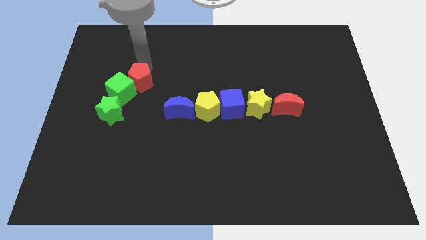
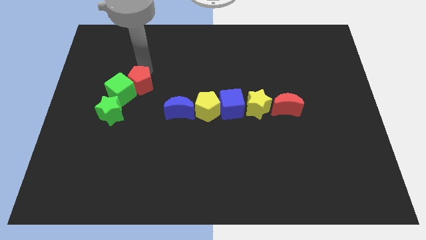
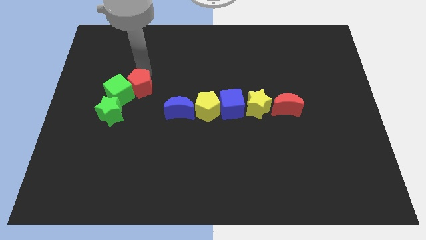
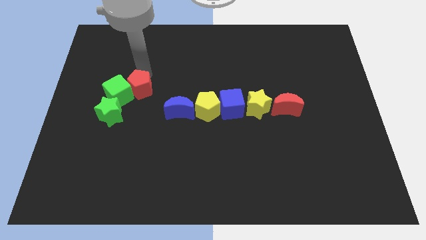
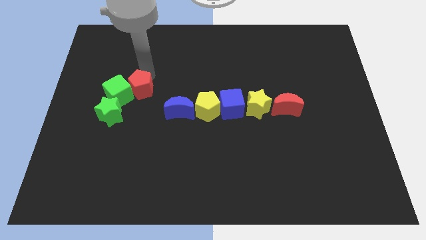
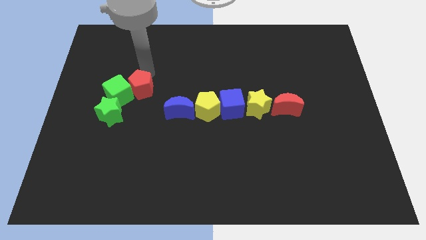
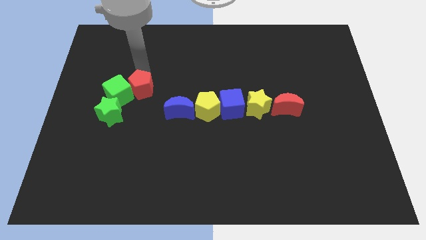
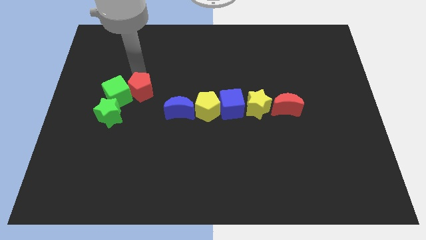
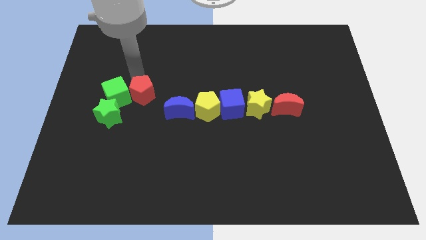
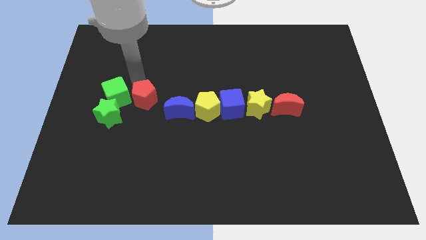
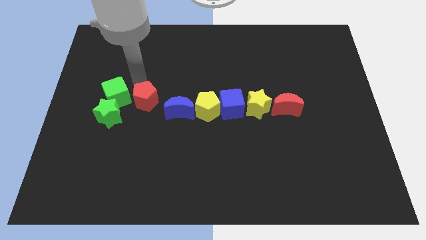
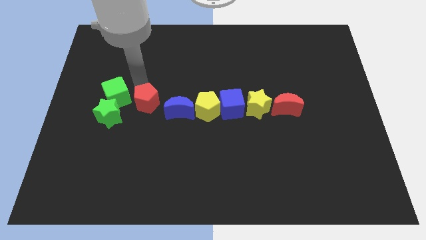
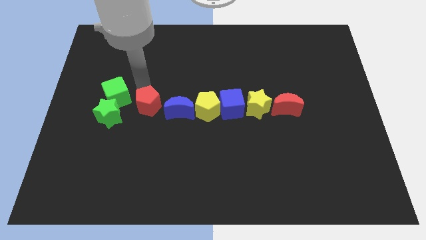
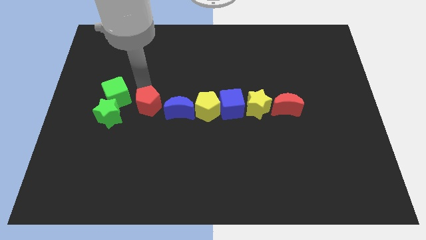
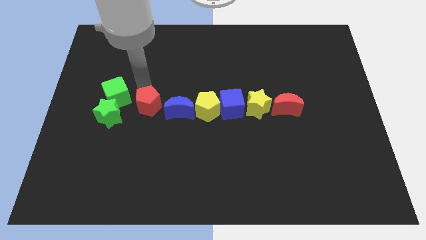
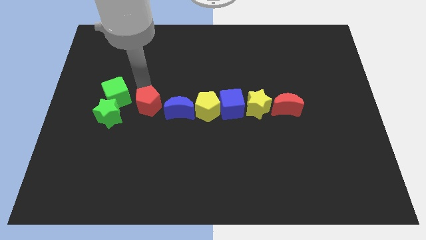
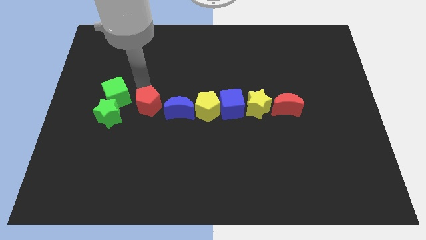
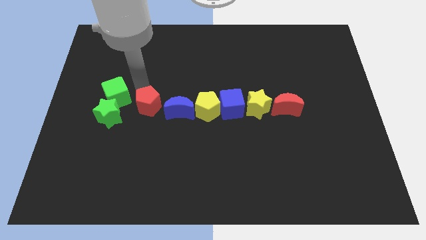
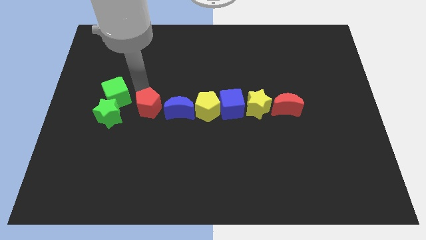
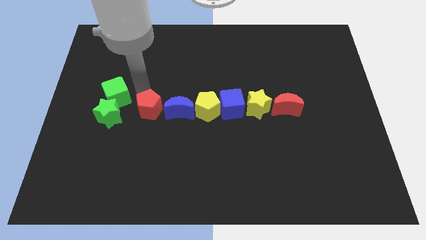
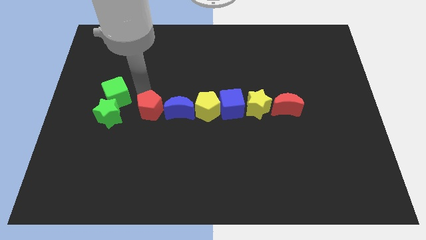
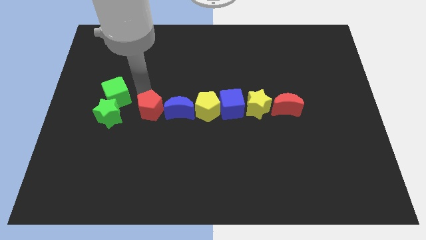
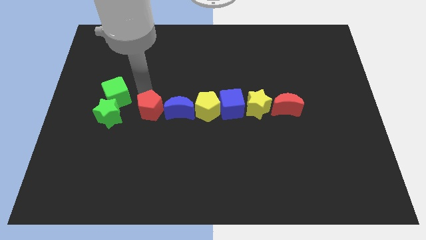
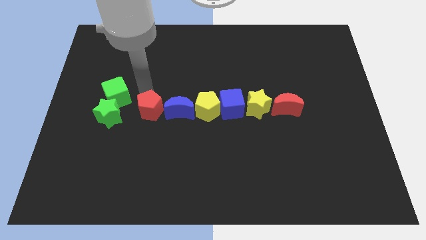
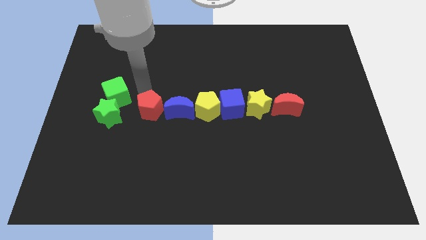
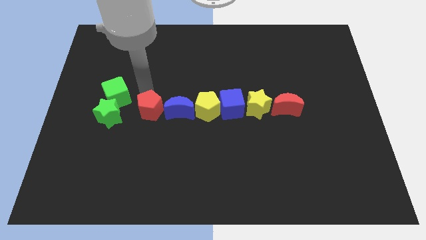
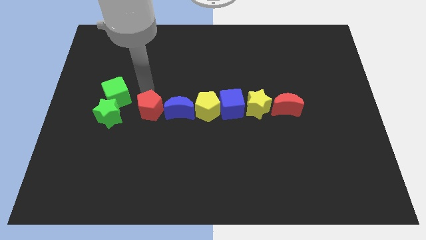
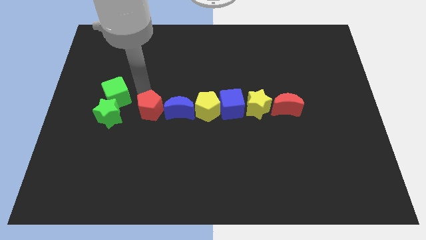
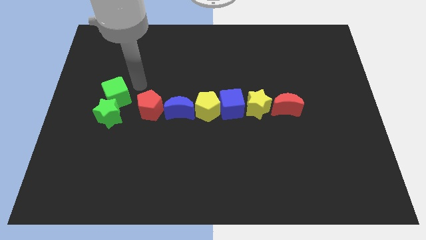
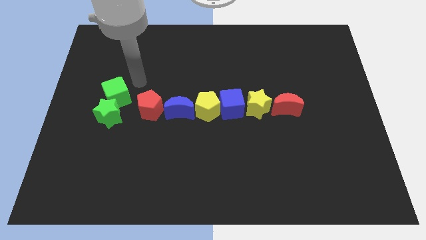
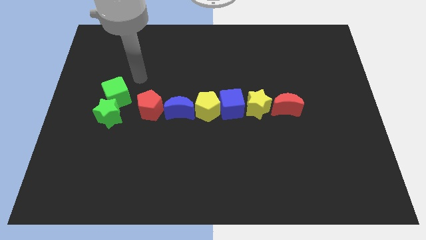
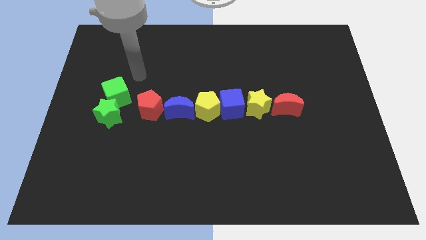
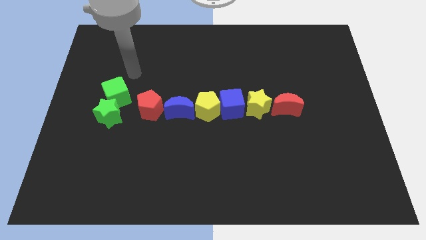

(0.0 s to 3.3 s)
place red pentagon to the left of blue crescent

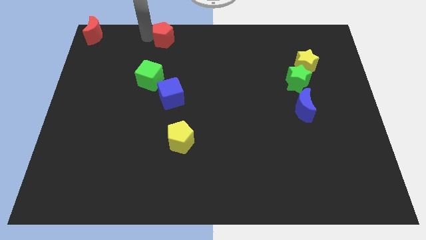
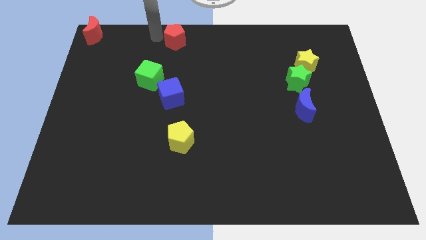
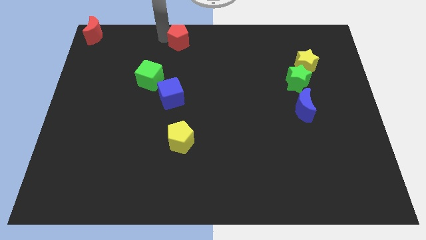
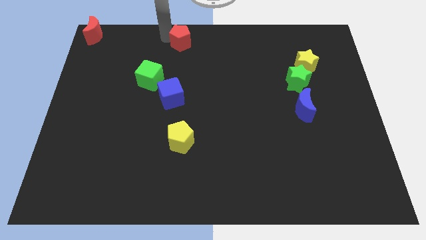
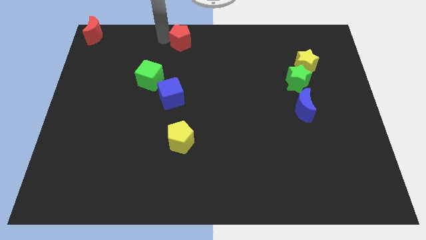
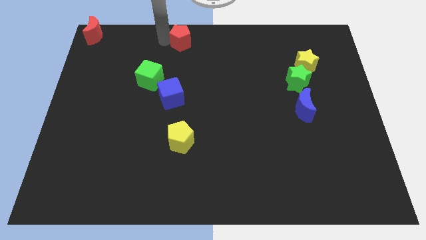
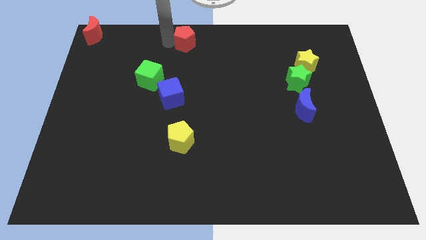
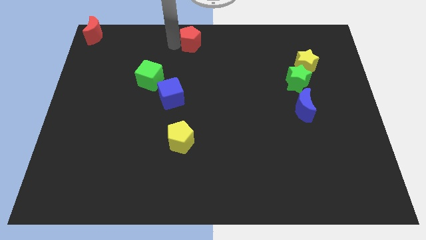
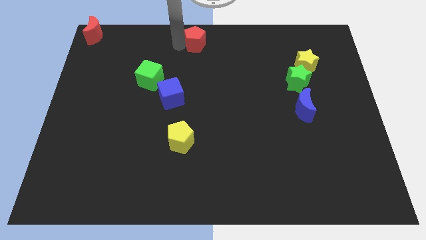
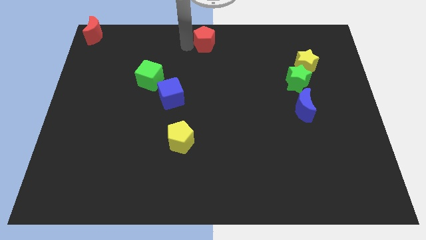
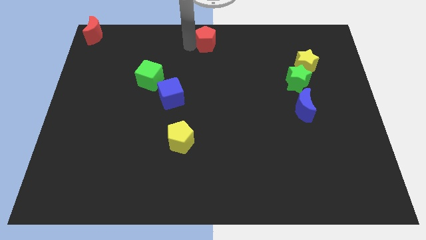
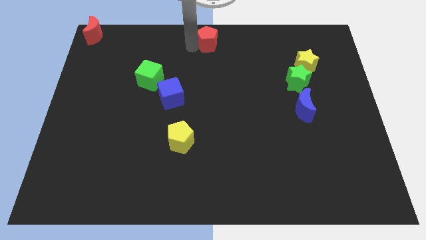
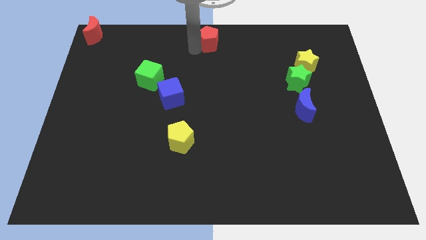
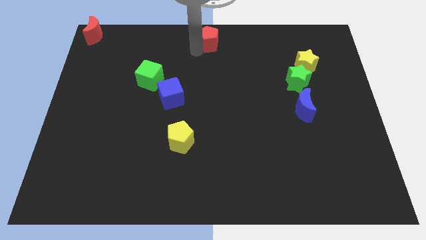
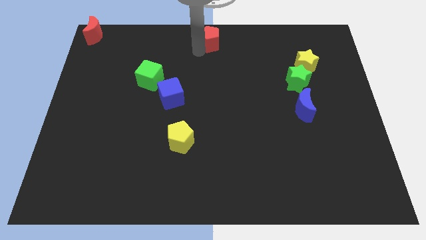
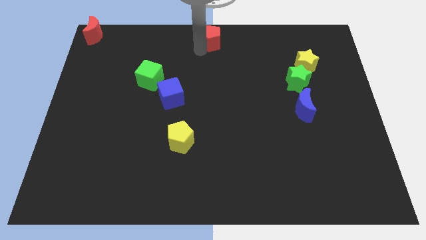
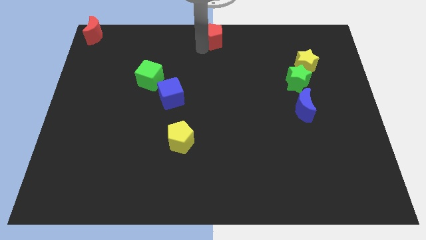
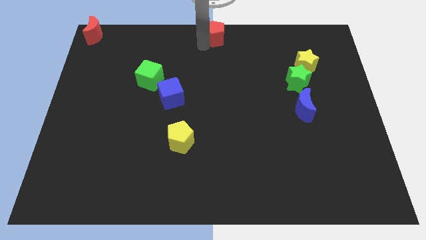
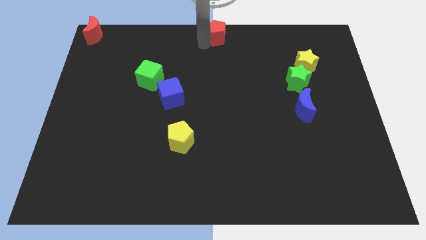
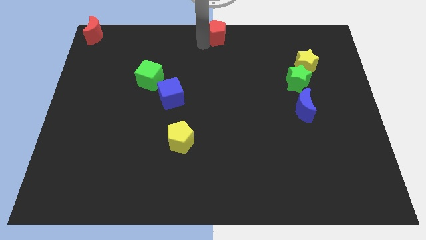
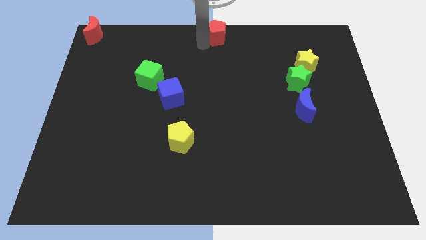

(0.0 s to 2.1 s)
place the red pentagon to the top center of the board

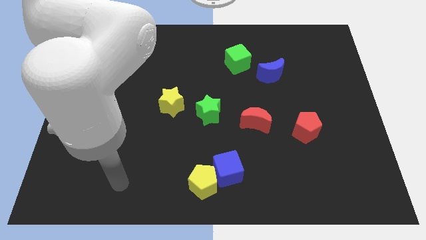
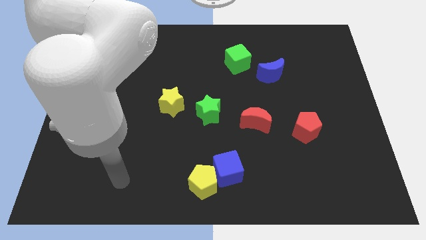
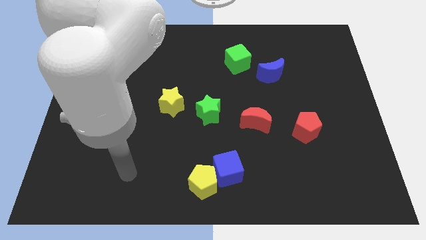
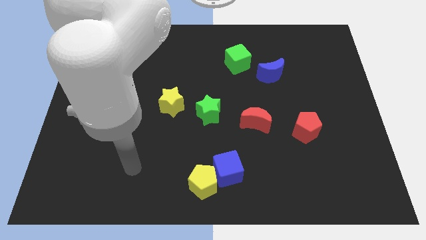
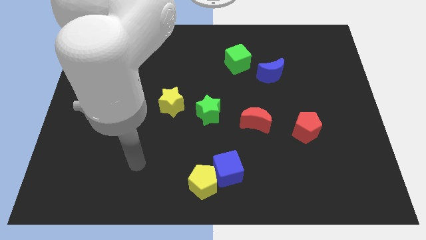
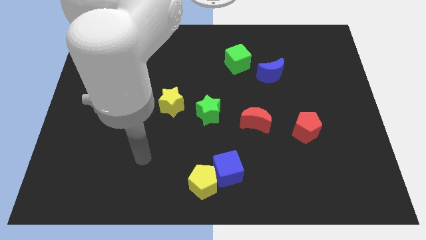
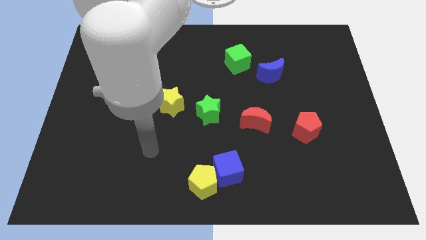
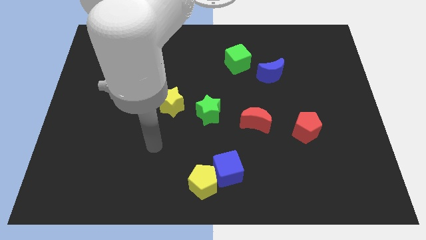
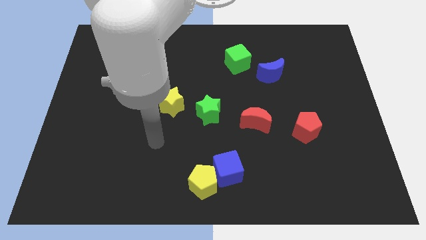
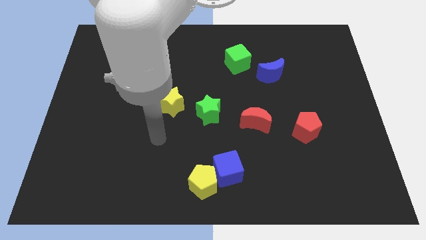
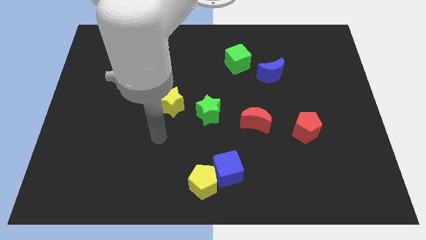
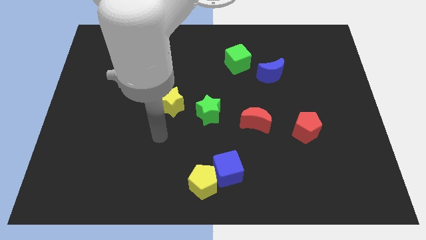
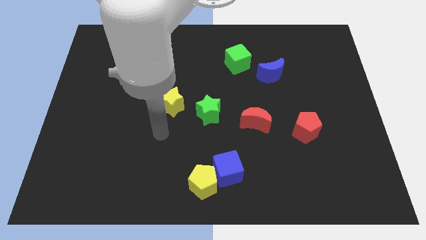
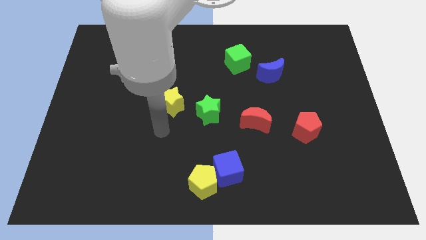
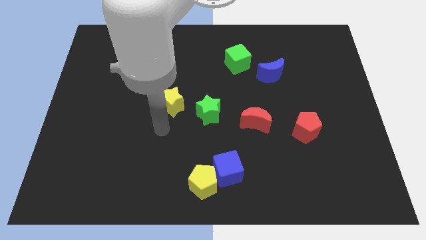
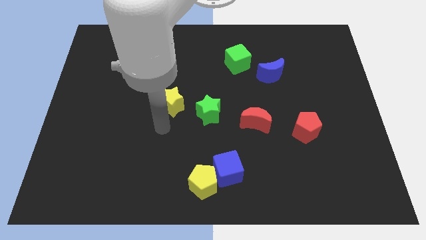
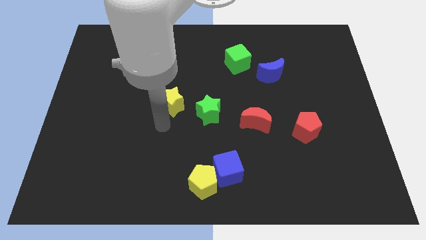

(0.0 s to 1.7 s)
place your hand below the yellow star

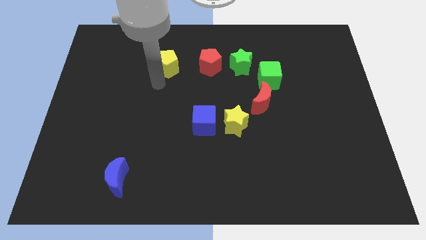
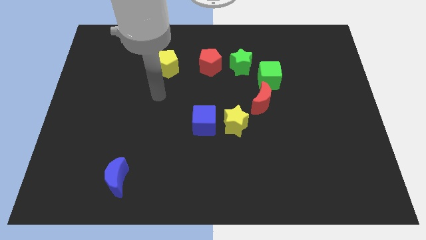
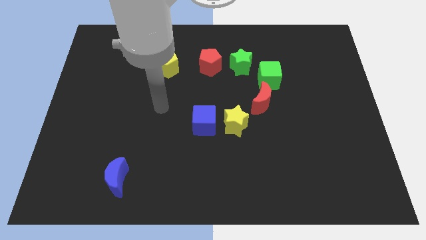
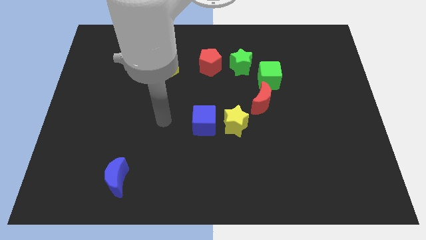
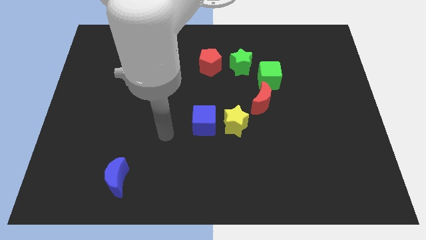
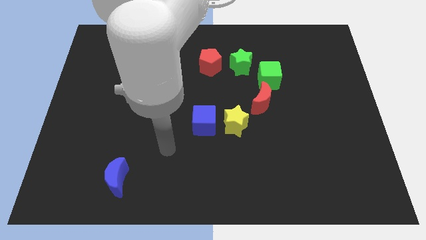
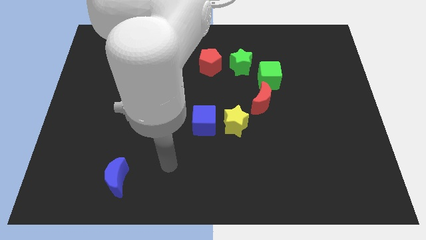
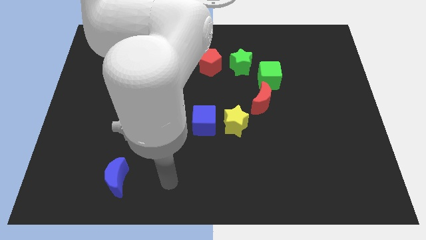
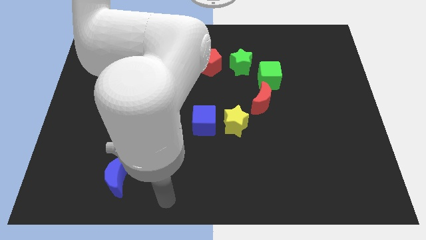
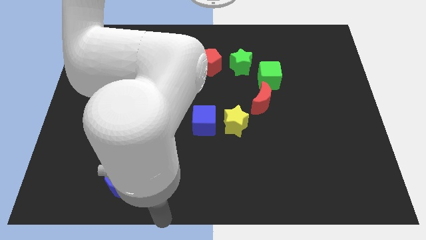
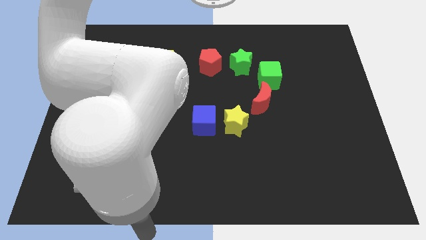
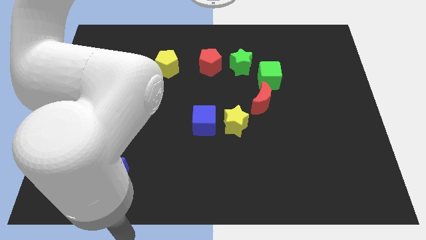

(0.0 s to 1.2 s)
move your arm away from the yellow pentagon

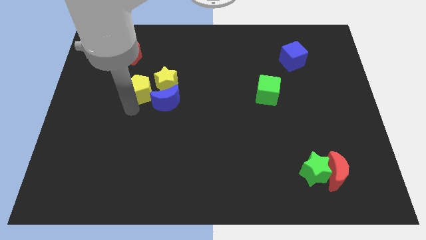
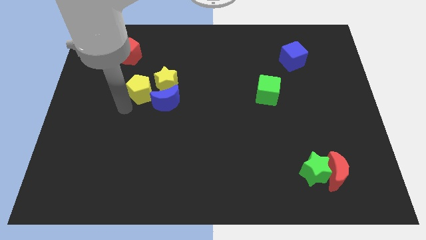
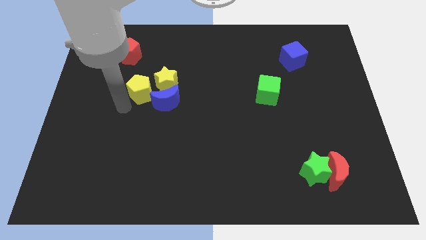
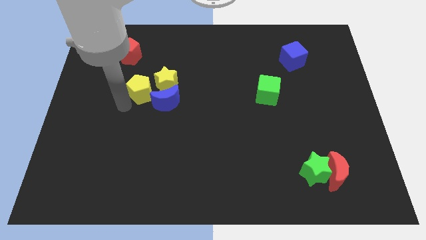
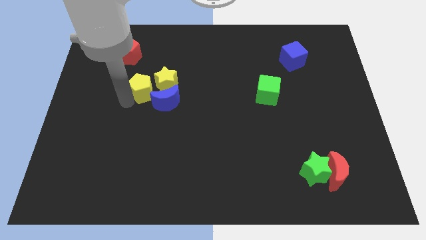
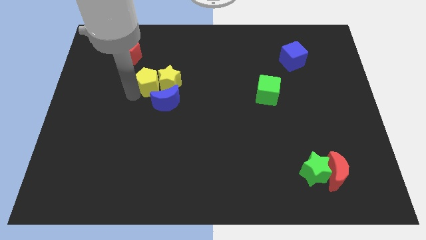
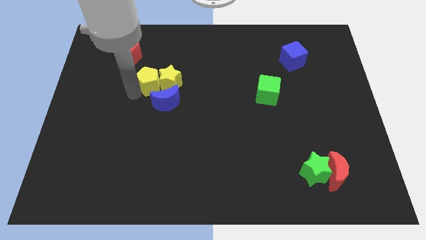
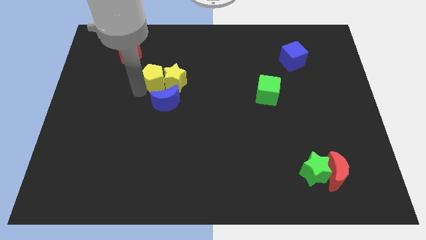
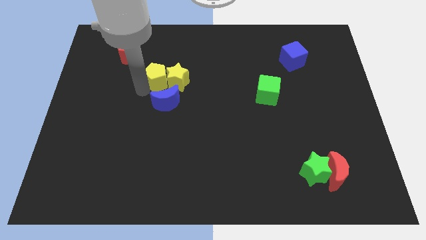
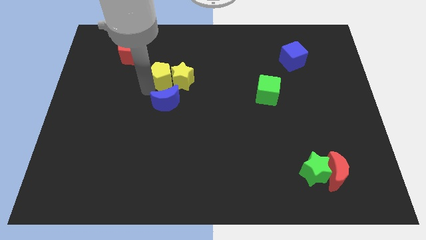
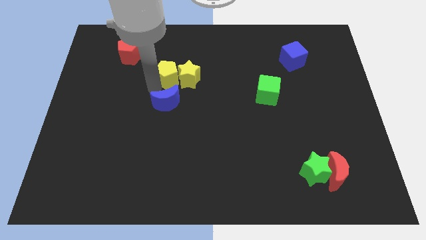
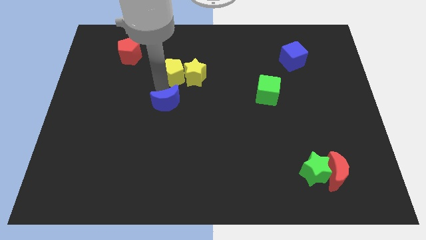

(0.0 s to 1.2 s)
push yellow pentagon in to yellow star
